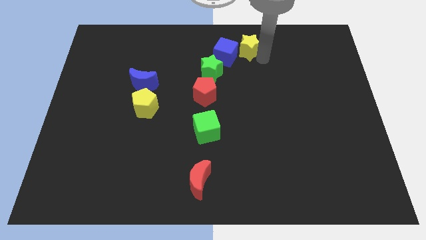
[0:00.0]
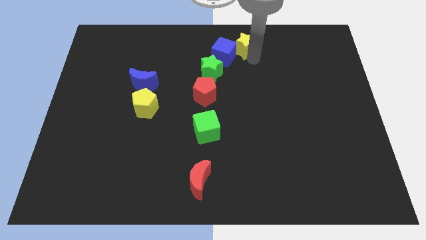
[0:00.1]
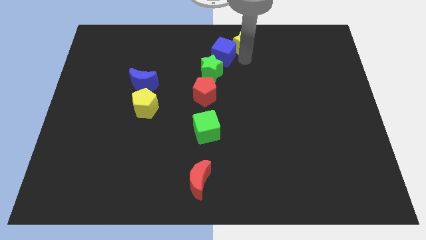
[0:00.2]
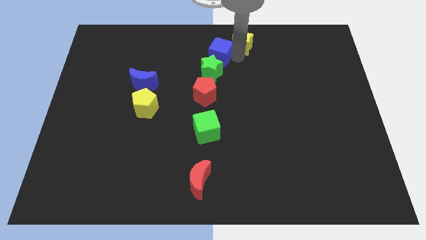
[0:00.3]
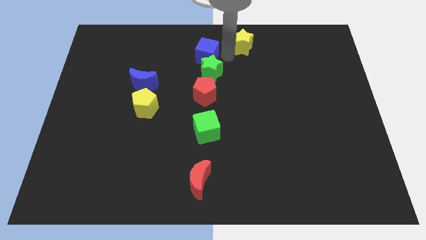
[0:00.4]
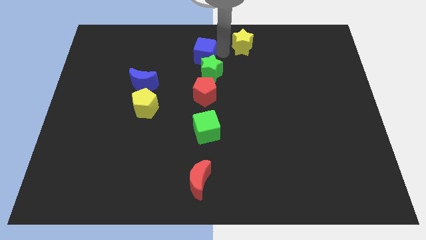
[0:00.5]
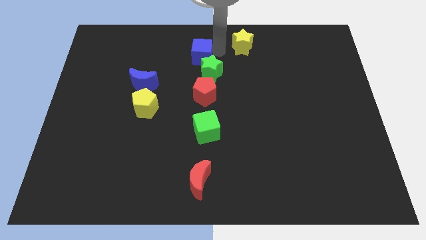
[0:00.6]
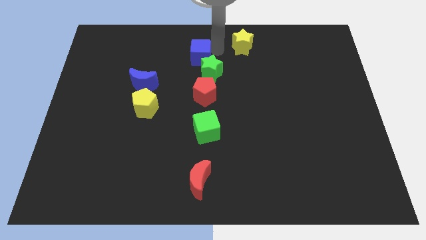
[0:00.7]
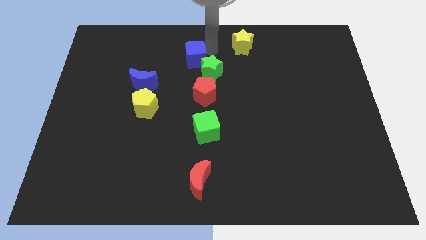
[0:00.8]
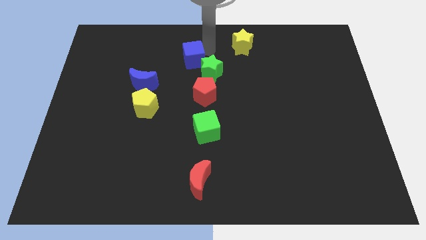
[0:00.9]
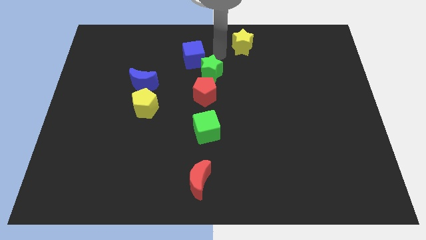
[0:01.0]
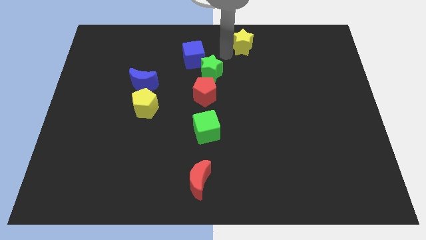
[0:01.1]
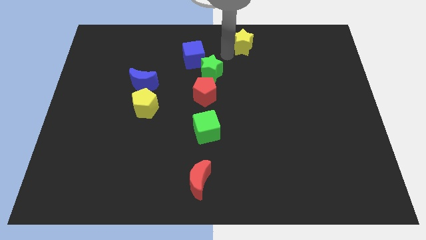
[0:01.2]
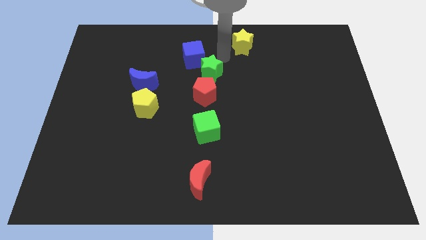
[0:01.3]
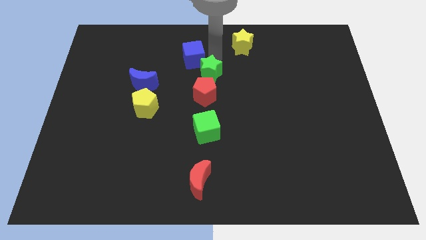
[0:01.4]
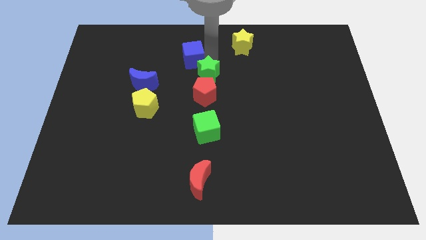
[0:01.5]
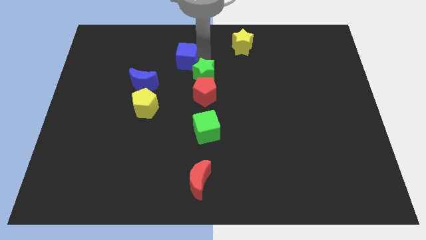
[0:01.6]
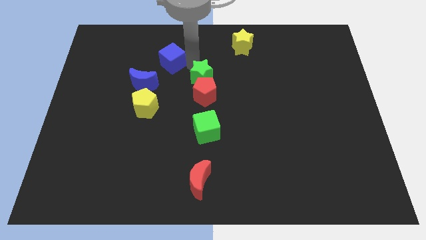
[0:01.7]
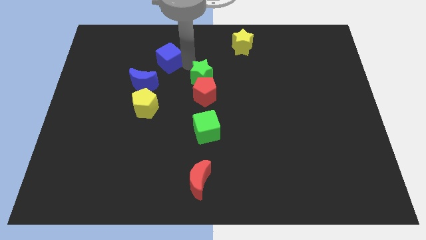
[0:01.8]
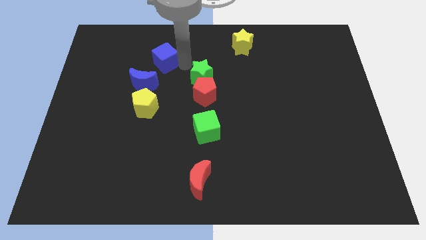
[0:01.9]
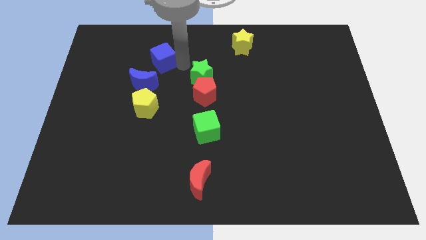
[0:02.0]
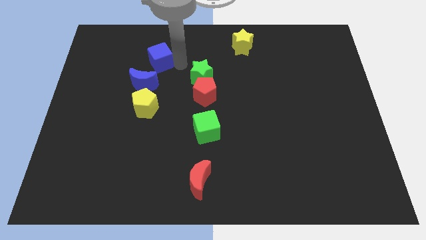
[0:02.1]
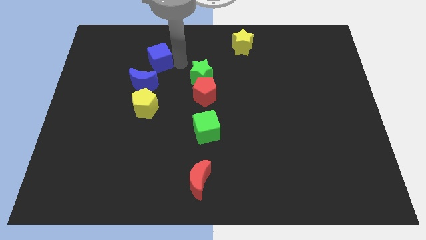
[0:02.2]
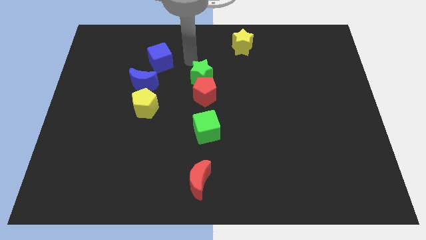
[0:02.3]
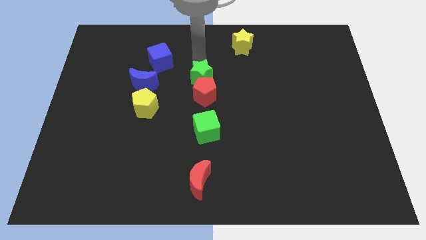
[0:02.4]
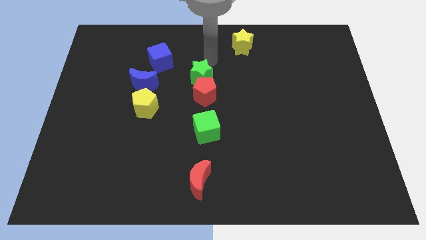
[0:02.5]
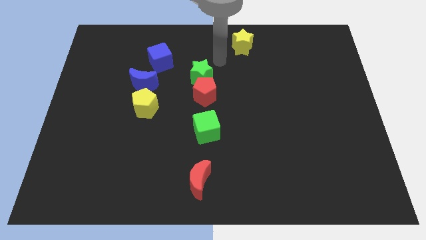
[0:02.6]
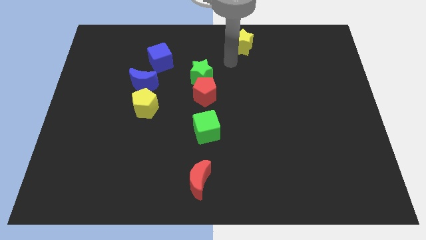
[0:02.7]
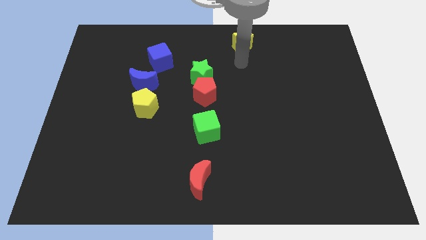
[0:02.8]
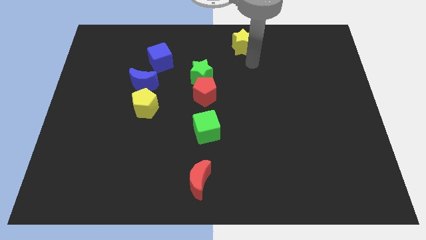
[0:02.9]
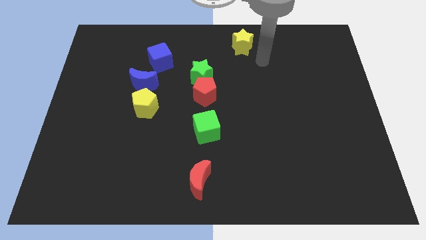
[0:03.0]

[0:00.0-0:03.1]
slide the blue cube at the top right side of the blue crescent

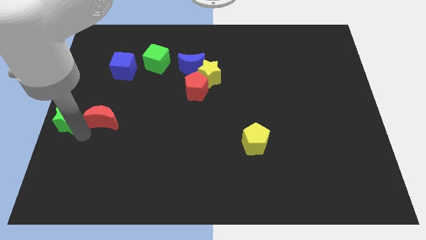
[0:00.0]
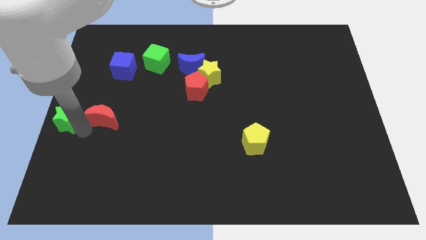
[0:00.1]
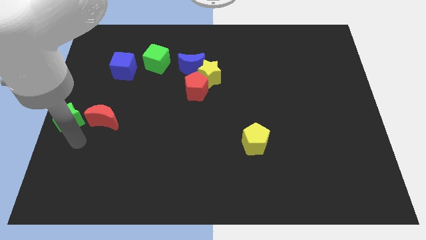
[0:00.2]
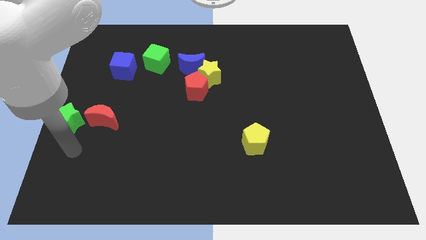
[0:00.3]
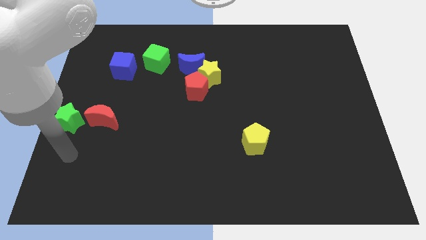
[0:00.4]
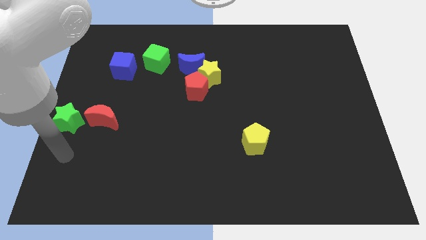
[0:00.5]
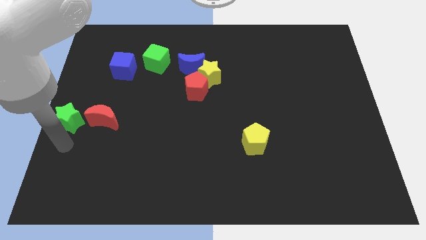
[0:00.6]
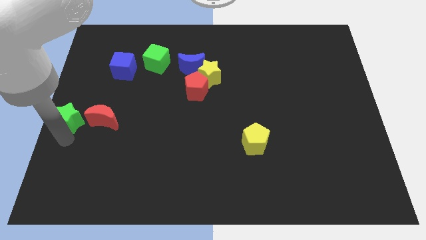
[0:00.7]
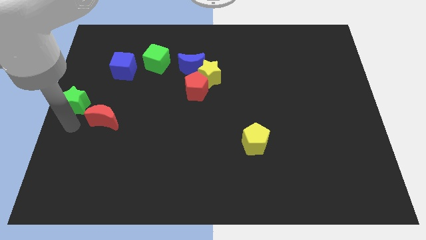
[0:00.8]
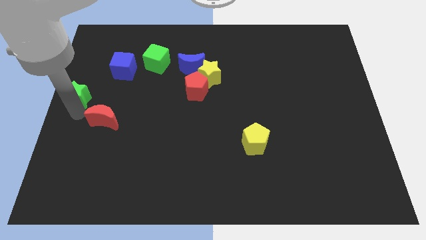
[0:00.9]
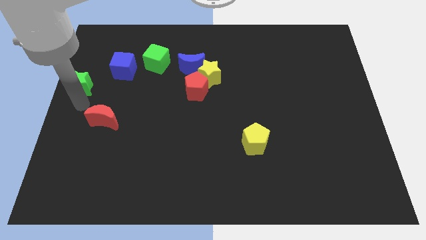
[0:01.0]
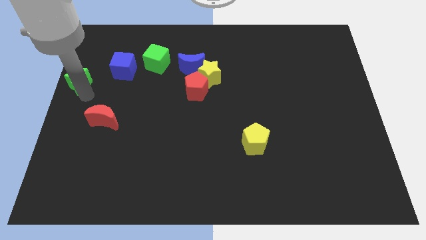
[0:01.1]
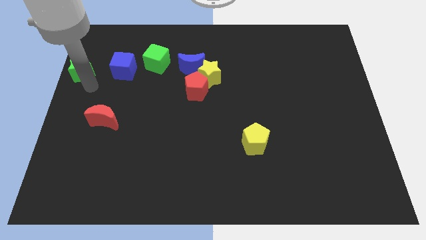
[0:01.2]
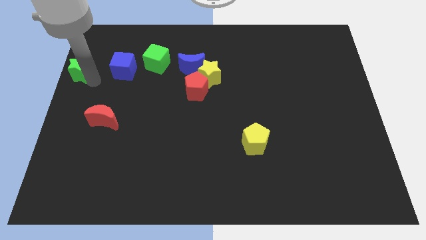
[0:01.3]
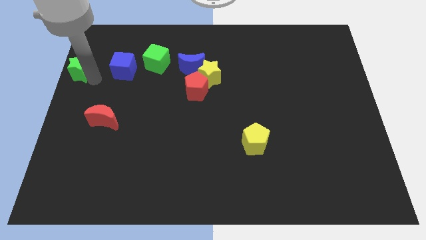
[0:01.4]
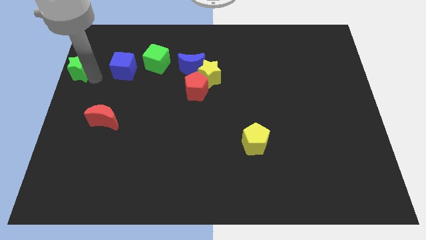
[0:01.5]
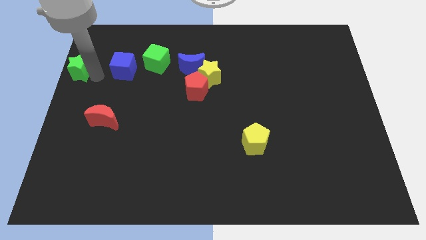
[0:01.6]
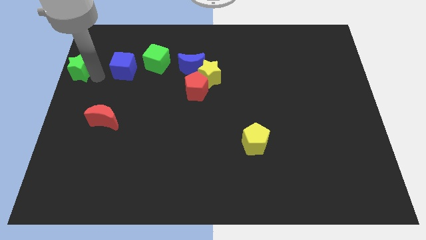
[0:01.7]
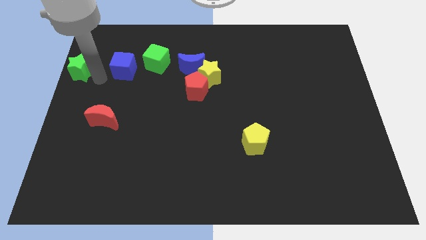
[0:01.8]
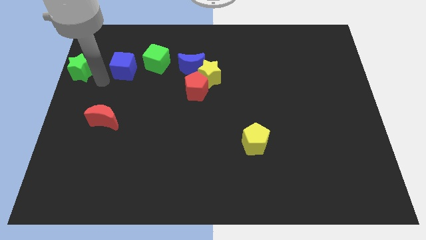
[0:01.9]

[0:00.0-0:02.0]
push the green star towards the left side of the blue cube

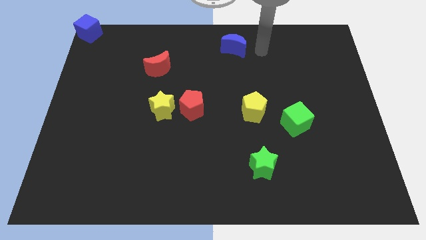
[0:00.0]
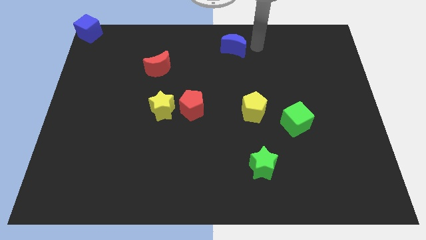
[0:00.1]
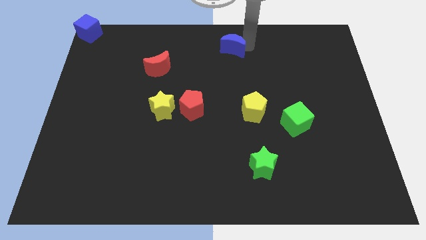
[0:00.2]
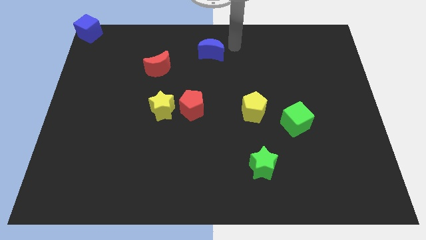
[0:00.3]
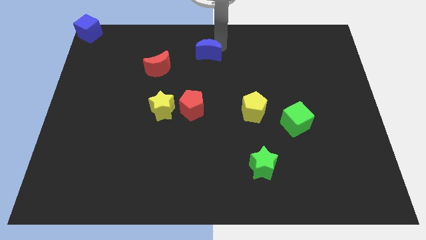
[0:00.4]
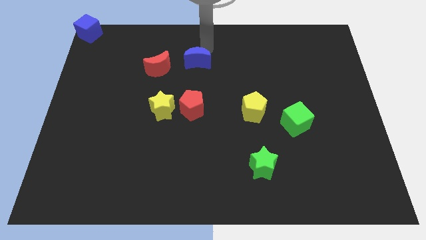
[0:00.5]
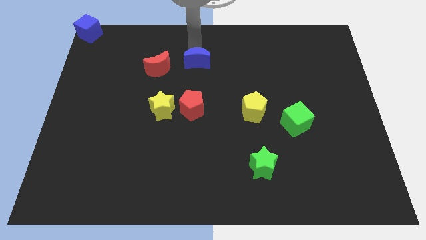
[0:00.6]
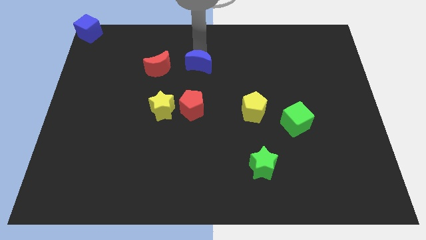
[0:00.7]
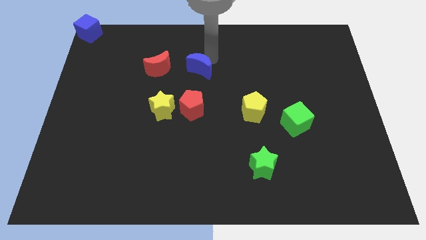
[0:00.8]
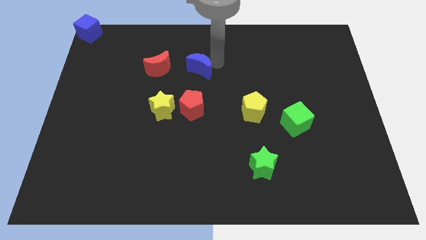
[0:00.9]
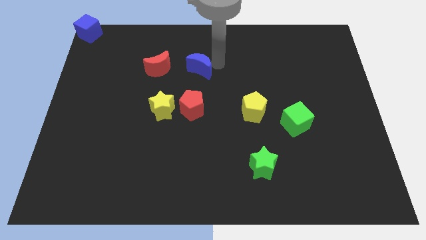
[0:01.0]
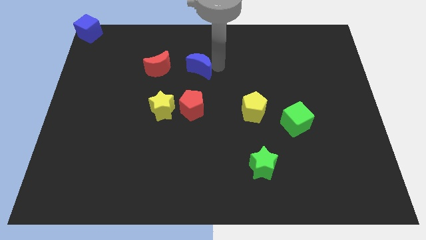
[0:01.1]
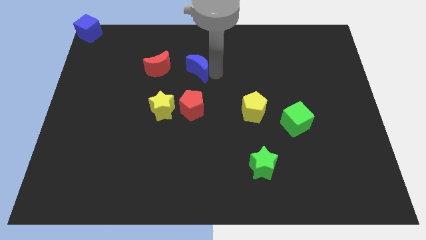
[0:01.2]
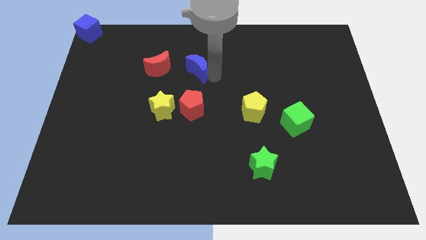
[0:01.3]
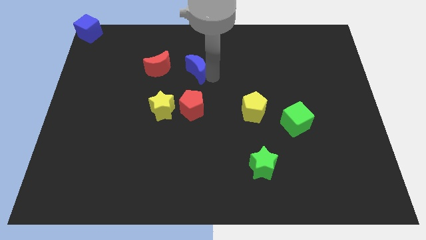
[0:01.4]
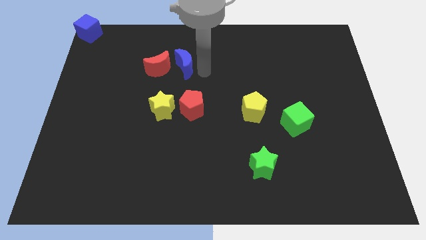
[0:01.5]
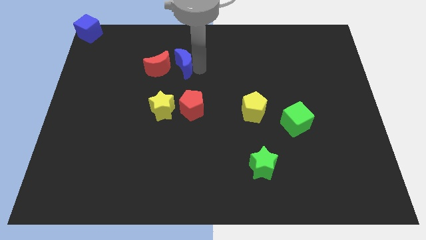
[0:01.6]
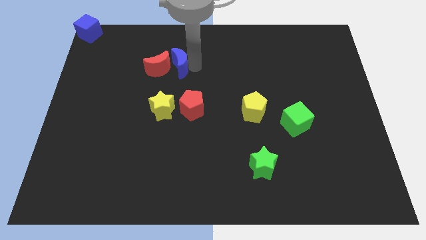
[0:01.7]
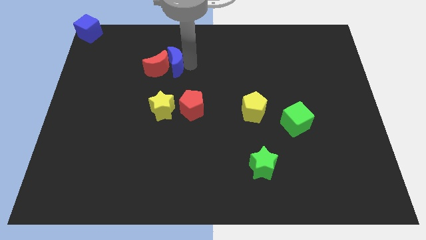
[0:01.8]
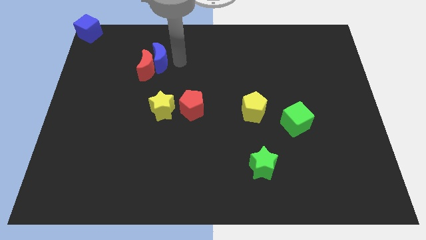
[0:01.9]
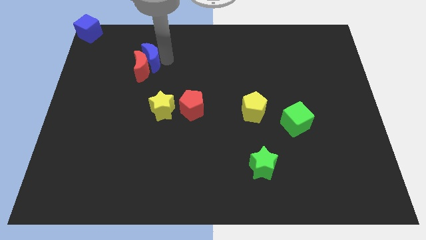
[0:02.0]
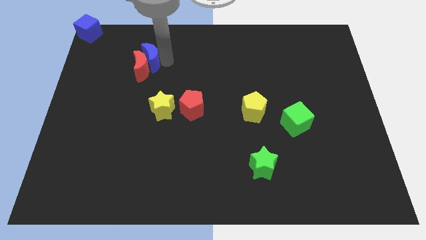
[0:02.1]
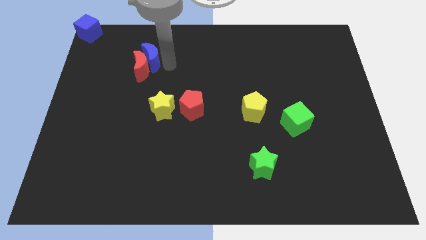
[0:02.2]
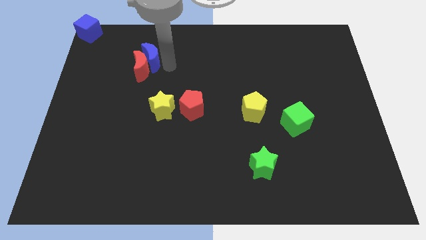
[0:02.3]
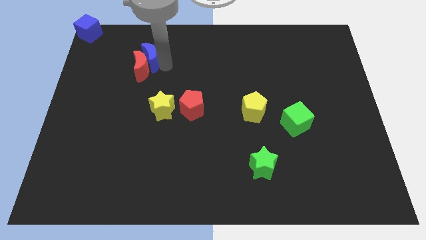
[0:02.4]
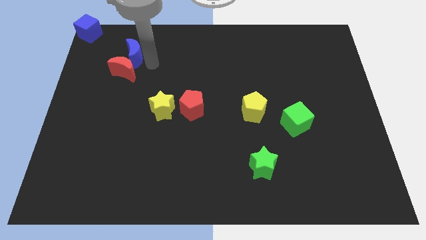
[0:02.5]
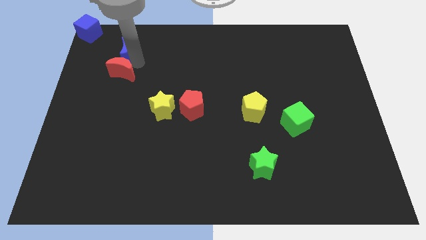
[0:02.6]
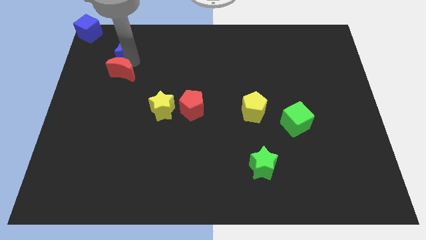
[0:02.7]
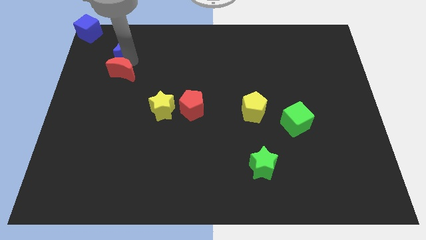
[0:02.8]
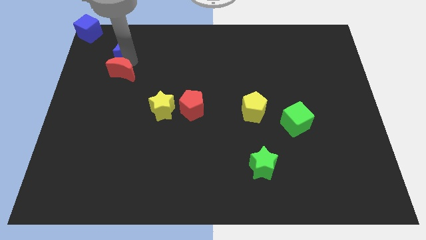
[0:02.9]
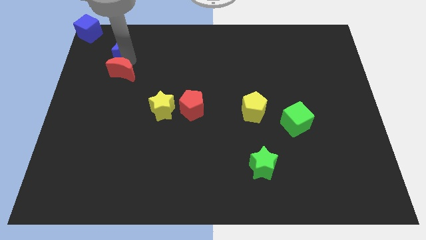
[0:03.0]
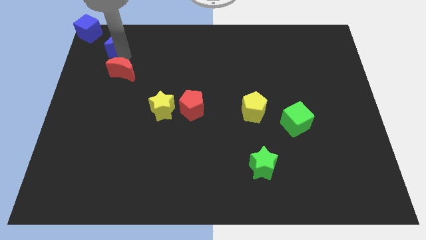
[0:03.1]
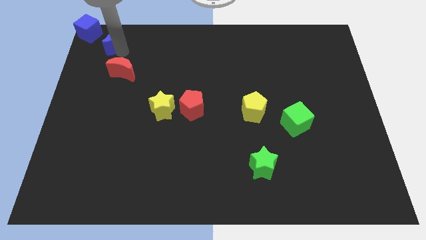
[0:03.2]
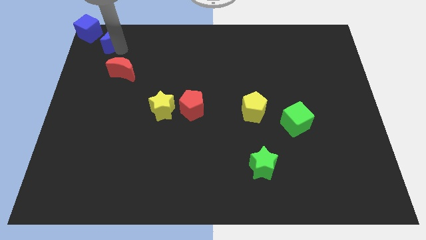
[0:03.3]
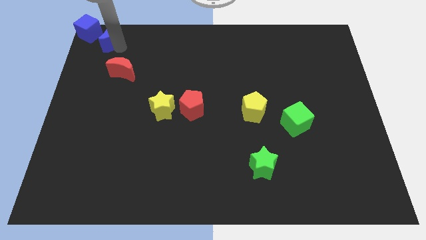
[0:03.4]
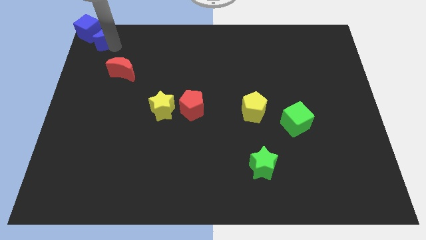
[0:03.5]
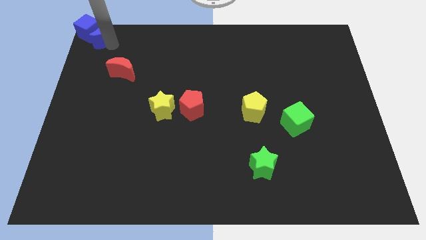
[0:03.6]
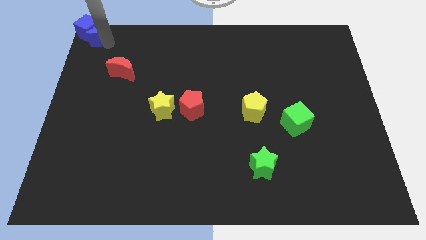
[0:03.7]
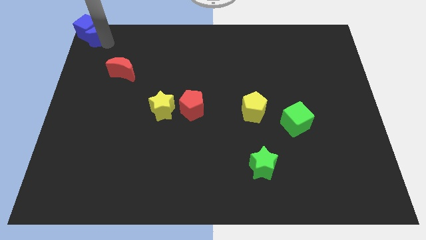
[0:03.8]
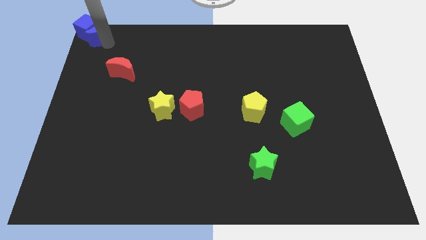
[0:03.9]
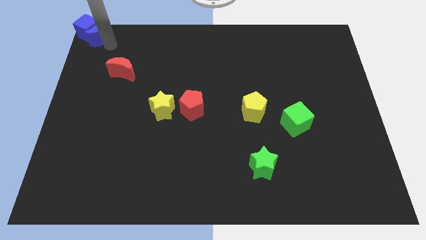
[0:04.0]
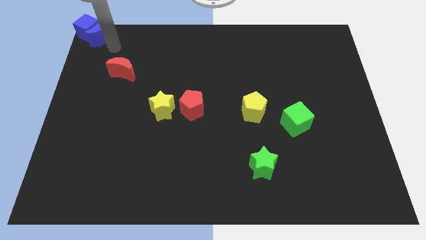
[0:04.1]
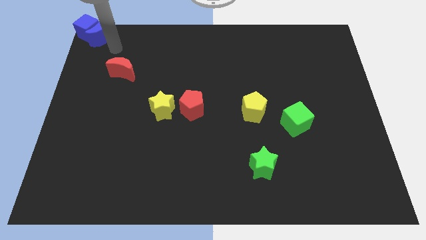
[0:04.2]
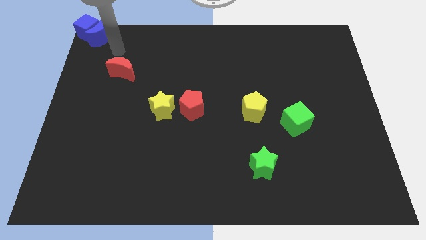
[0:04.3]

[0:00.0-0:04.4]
push the blue moon into the right side of the blue cube
